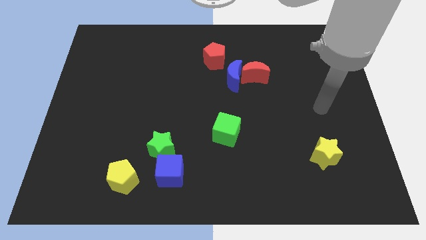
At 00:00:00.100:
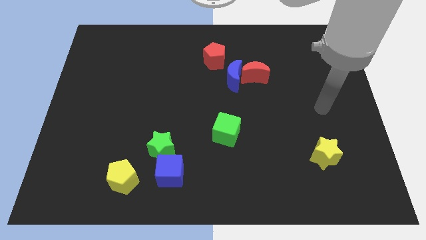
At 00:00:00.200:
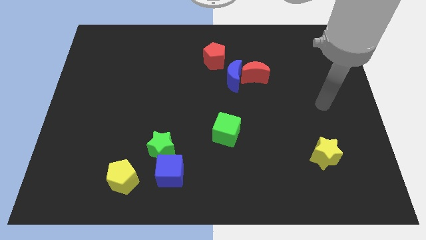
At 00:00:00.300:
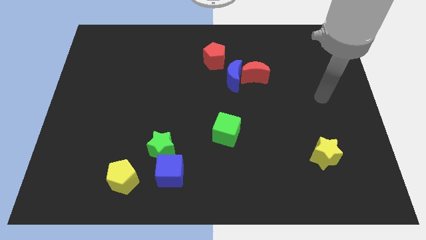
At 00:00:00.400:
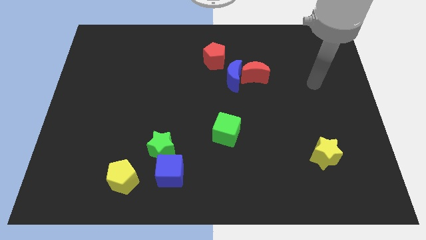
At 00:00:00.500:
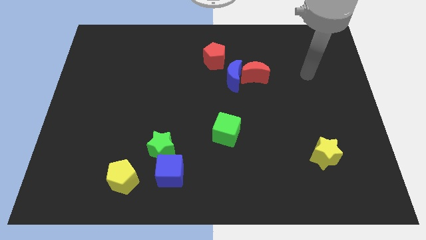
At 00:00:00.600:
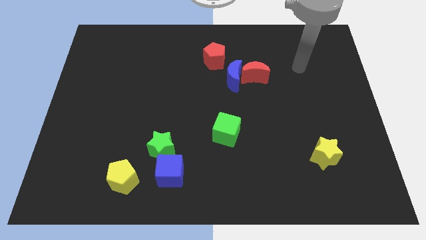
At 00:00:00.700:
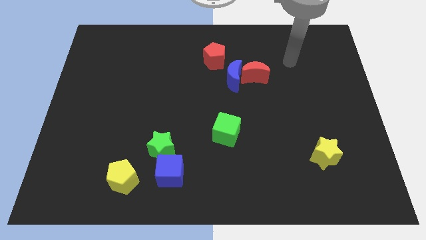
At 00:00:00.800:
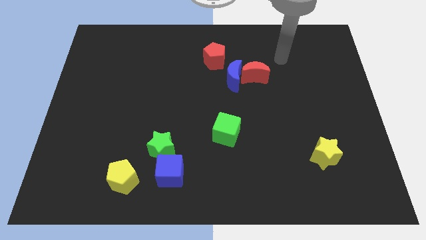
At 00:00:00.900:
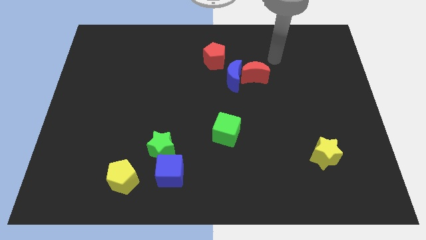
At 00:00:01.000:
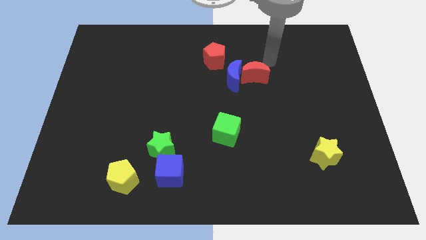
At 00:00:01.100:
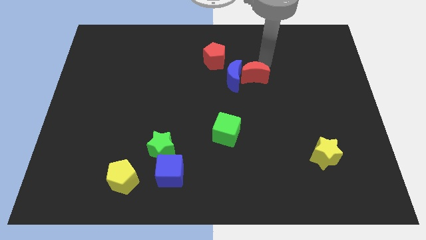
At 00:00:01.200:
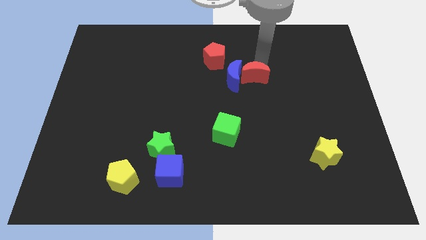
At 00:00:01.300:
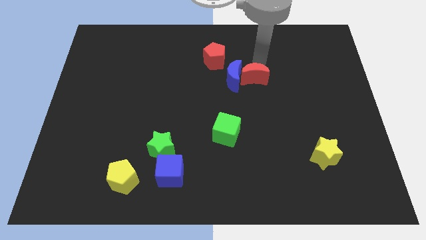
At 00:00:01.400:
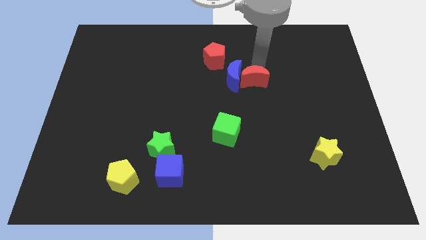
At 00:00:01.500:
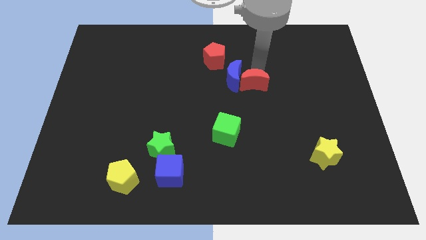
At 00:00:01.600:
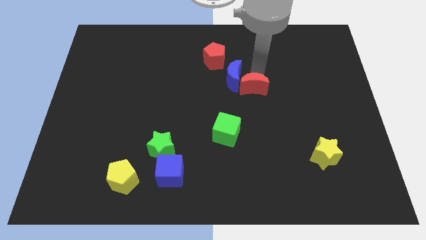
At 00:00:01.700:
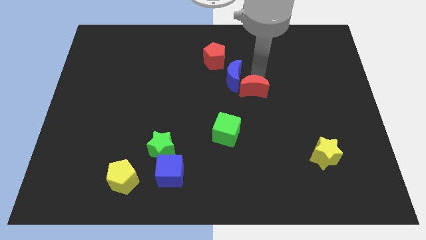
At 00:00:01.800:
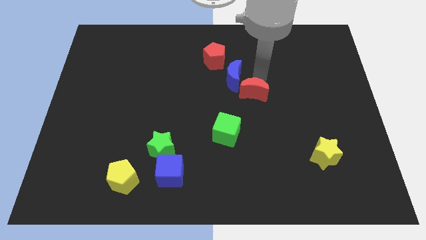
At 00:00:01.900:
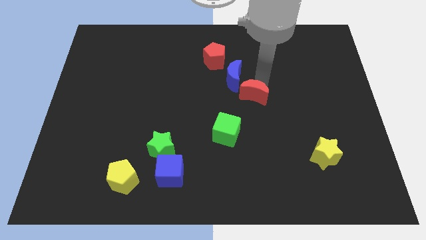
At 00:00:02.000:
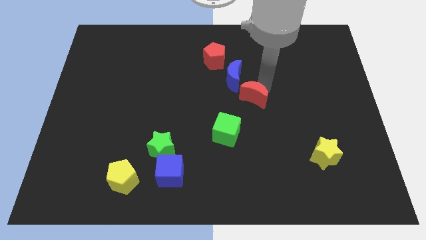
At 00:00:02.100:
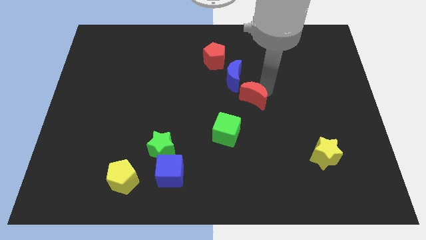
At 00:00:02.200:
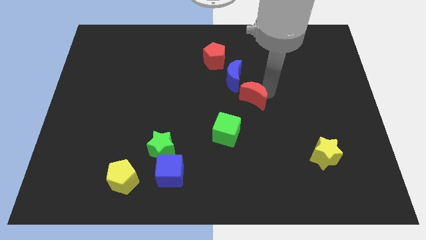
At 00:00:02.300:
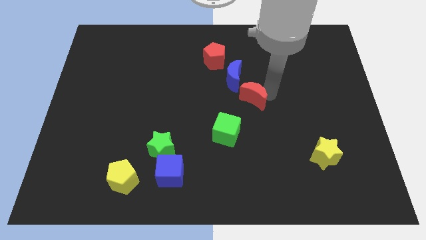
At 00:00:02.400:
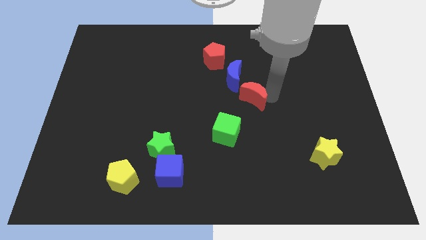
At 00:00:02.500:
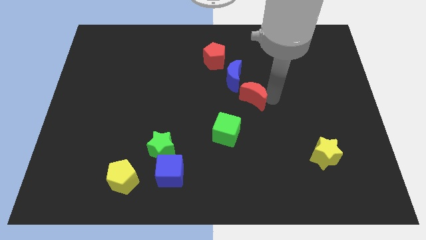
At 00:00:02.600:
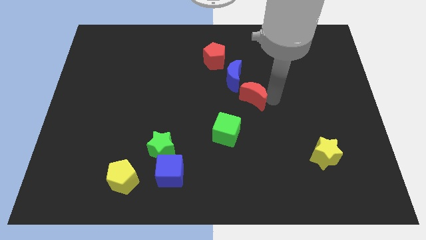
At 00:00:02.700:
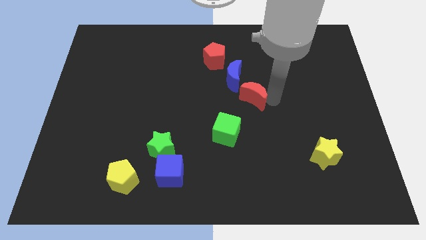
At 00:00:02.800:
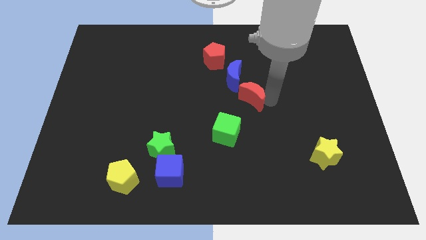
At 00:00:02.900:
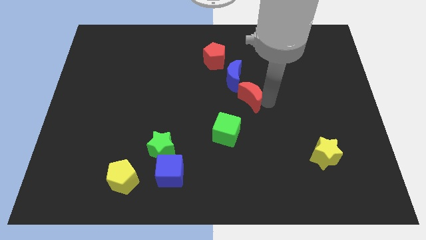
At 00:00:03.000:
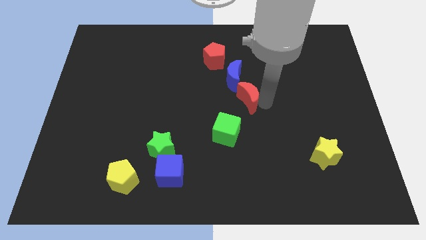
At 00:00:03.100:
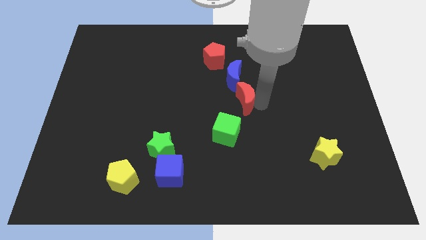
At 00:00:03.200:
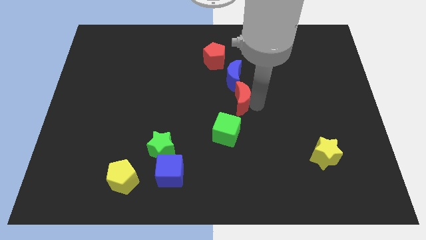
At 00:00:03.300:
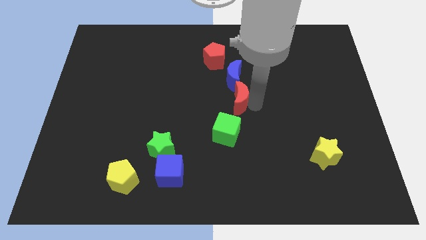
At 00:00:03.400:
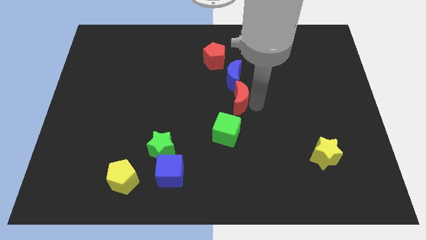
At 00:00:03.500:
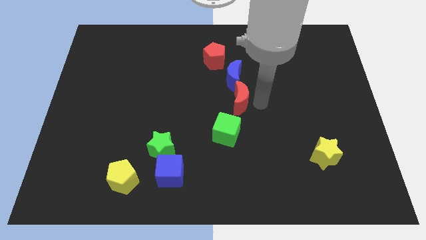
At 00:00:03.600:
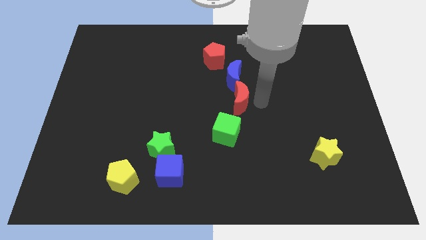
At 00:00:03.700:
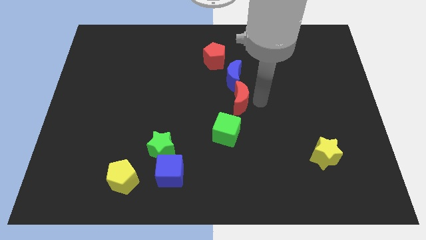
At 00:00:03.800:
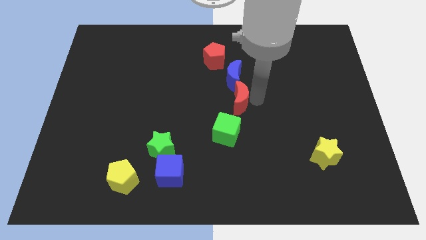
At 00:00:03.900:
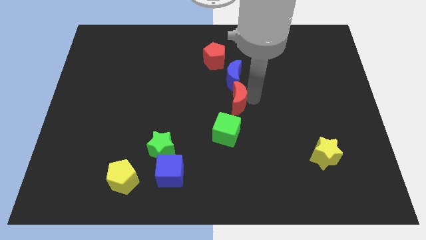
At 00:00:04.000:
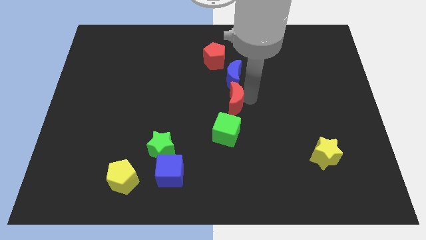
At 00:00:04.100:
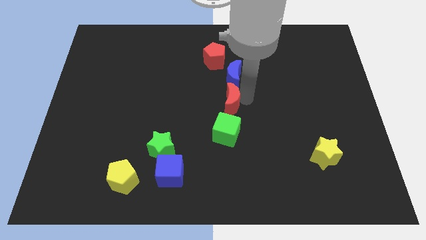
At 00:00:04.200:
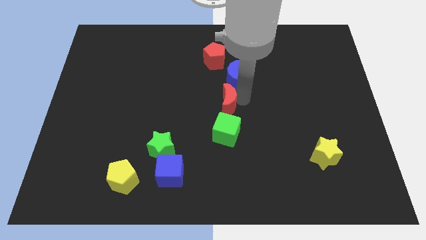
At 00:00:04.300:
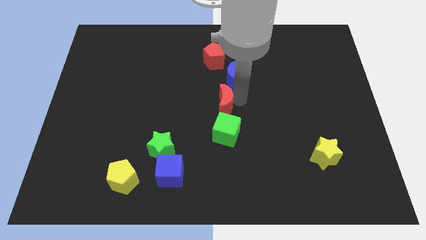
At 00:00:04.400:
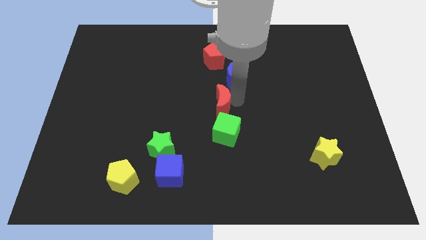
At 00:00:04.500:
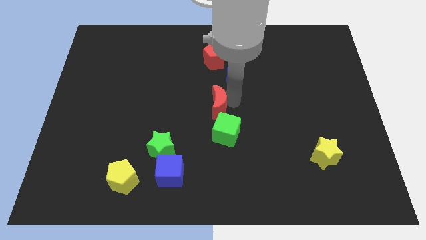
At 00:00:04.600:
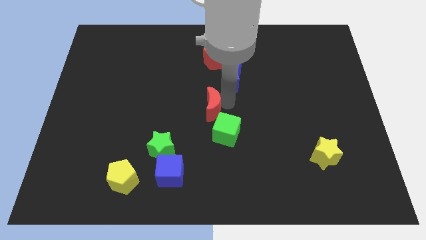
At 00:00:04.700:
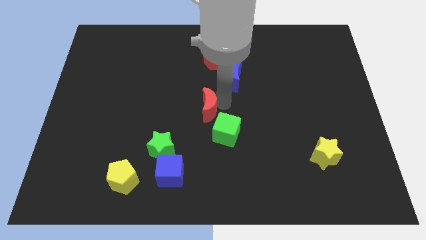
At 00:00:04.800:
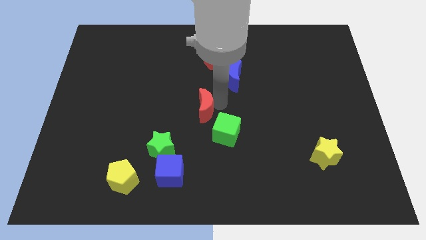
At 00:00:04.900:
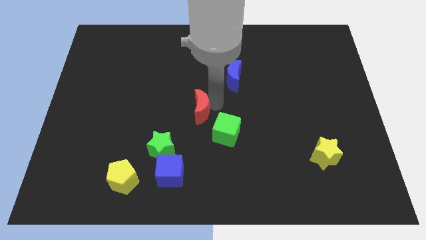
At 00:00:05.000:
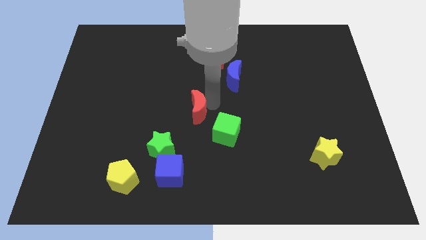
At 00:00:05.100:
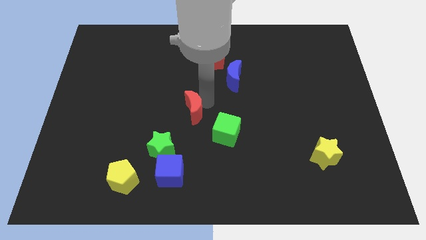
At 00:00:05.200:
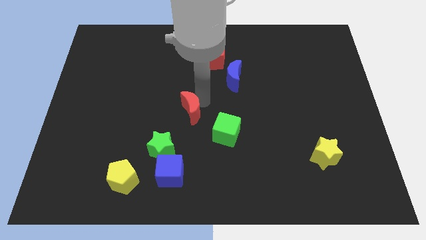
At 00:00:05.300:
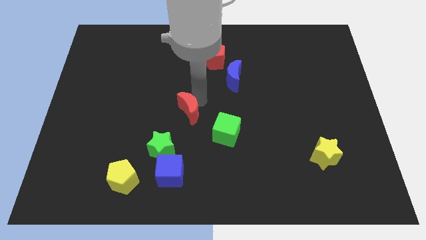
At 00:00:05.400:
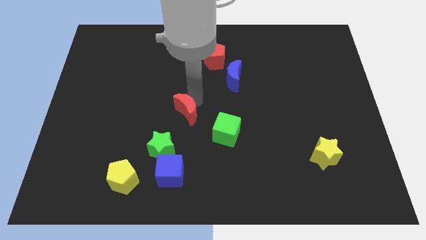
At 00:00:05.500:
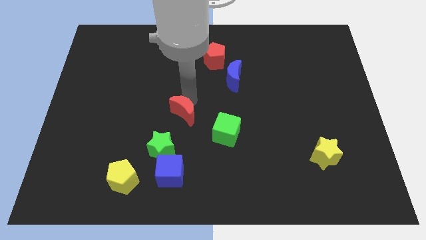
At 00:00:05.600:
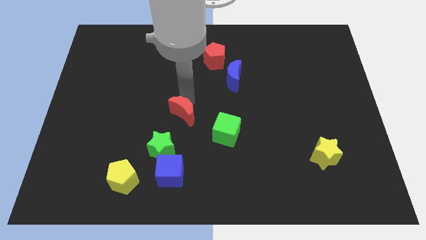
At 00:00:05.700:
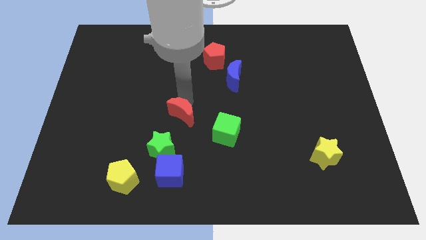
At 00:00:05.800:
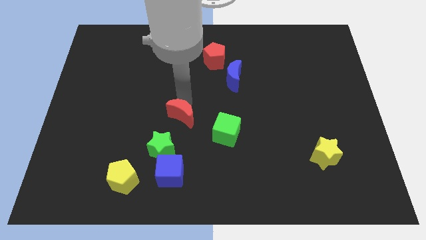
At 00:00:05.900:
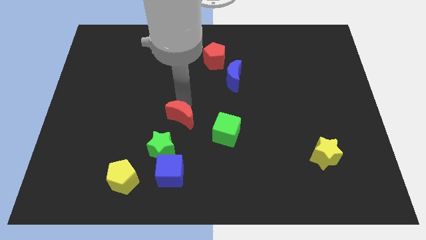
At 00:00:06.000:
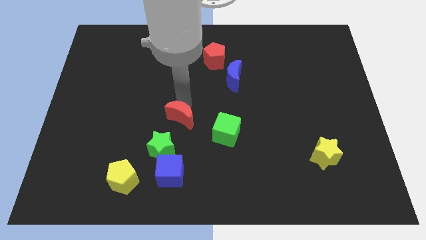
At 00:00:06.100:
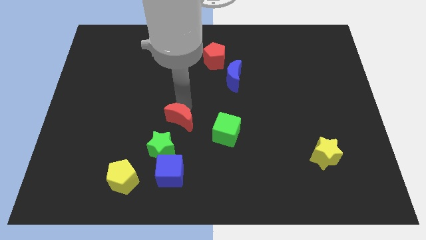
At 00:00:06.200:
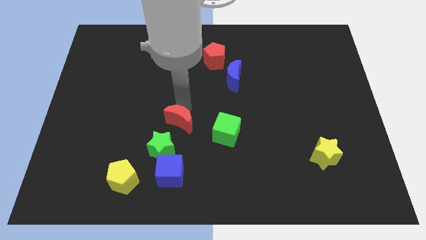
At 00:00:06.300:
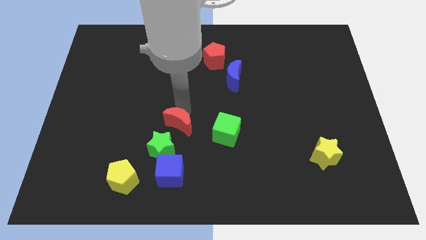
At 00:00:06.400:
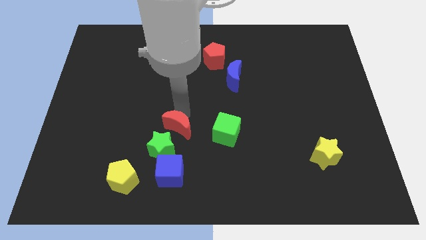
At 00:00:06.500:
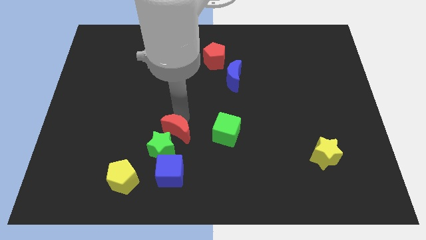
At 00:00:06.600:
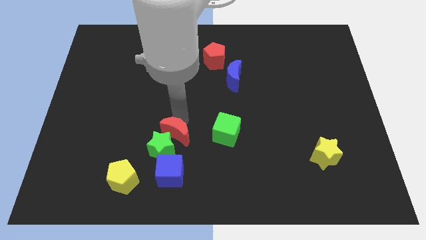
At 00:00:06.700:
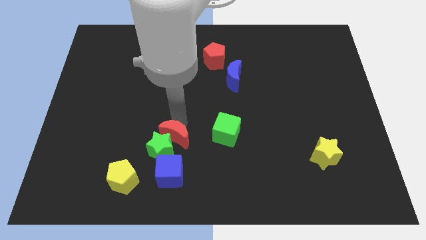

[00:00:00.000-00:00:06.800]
put the red moon to the green star

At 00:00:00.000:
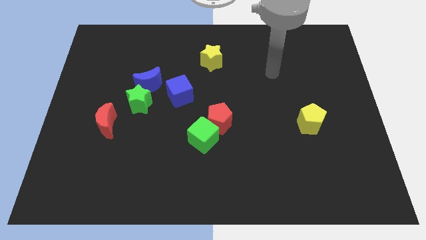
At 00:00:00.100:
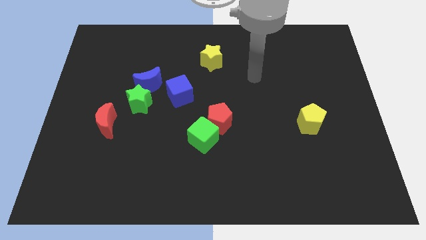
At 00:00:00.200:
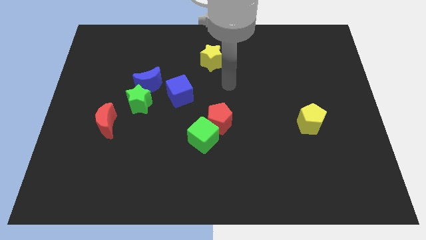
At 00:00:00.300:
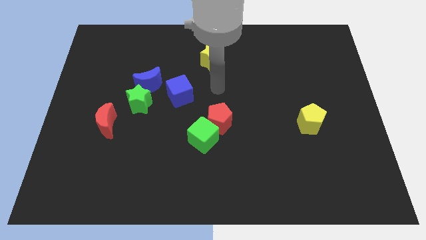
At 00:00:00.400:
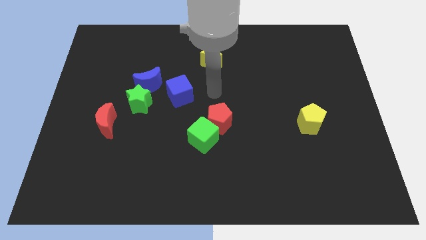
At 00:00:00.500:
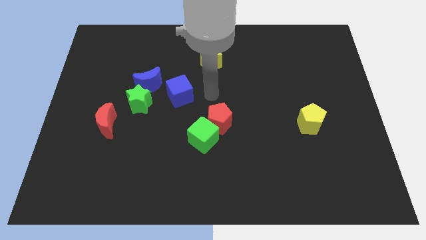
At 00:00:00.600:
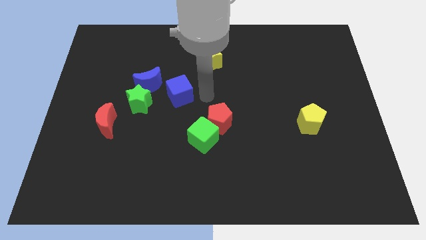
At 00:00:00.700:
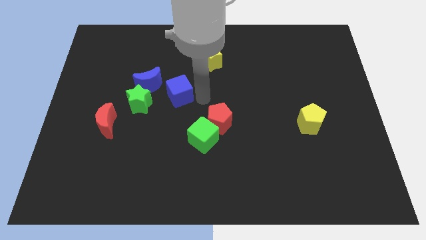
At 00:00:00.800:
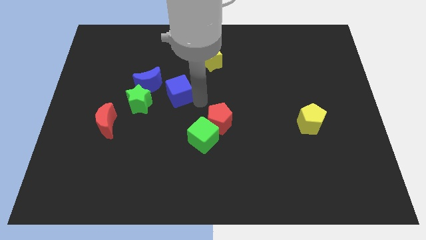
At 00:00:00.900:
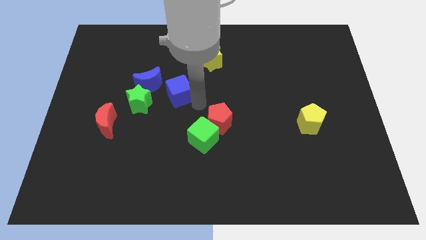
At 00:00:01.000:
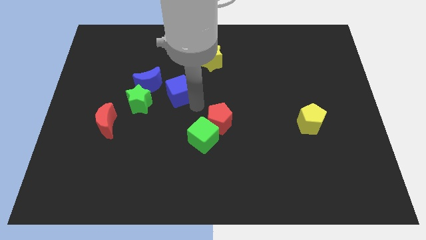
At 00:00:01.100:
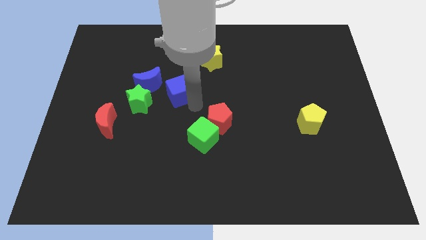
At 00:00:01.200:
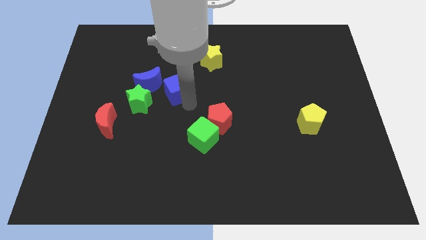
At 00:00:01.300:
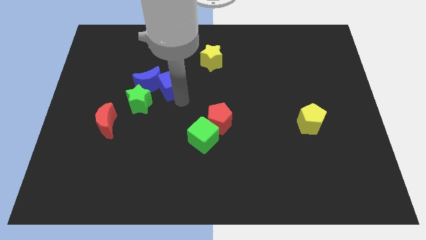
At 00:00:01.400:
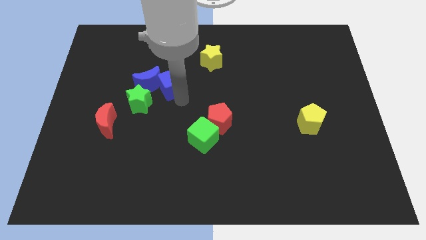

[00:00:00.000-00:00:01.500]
push the blue cube close to the blue moon
